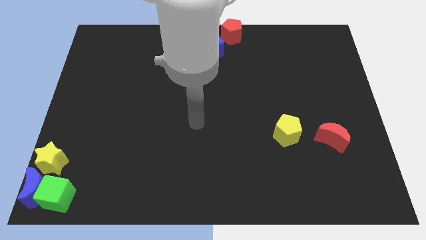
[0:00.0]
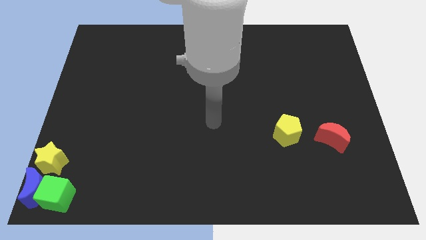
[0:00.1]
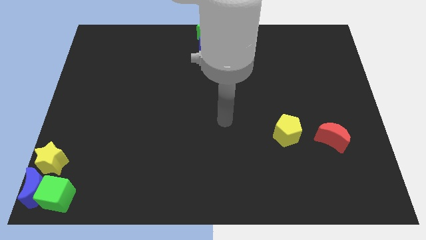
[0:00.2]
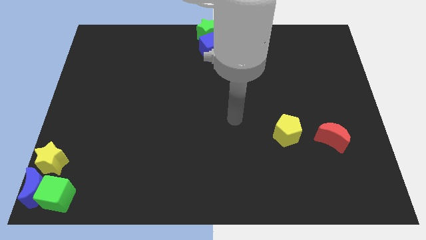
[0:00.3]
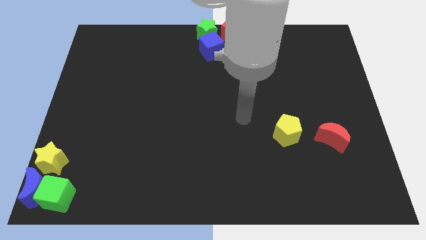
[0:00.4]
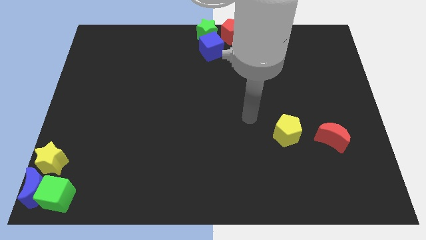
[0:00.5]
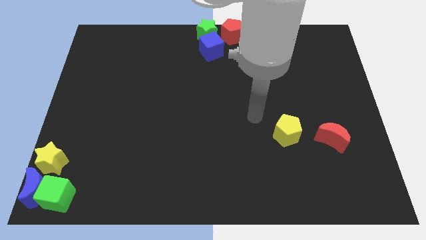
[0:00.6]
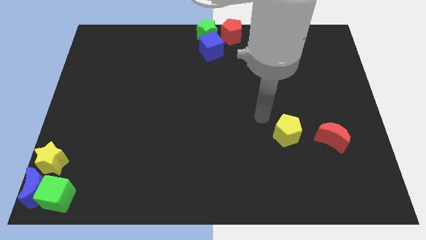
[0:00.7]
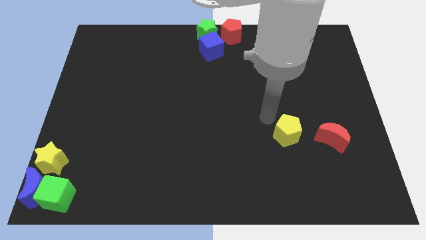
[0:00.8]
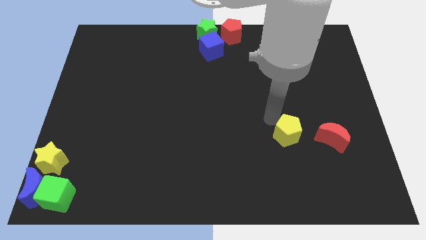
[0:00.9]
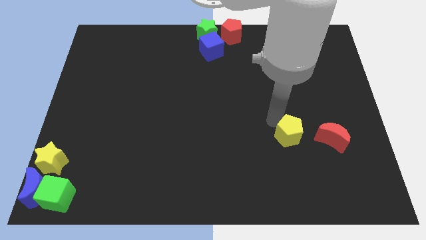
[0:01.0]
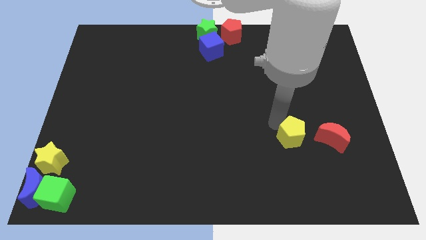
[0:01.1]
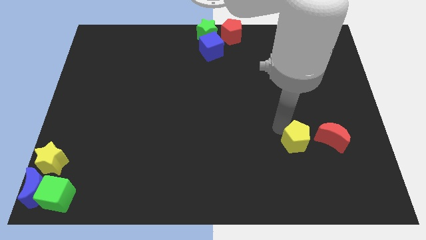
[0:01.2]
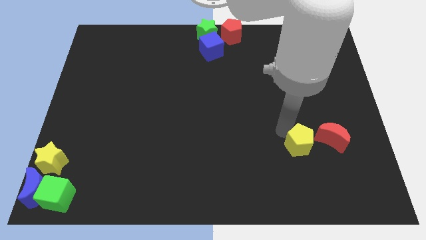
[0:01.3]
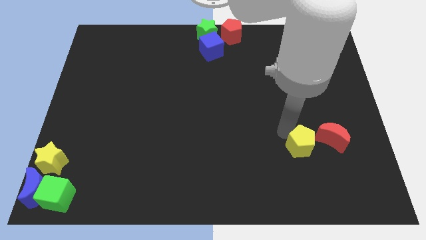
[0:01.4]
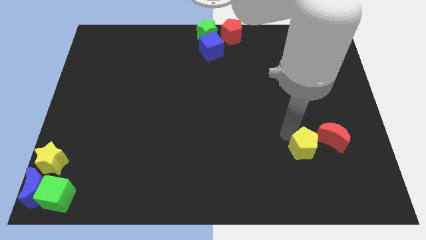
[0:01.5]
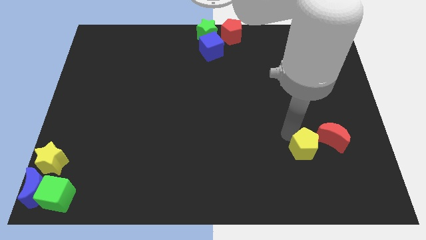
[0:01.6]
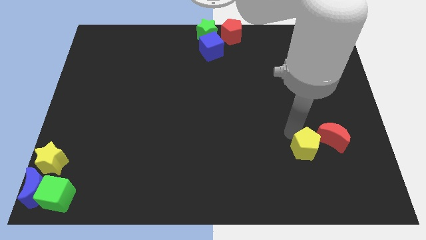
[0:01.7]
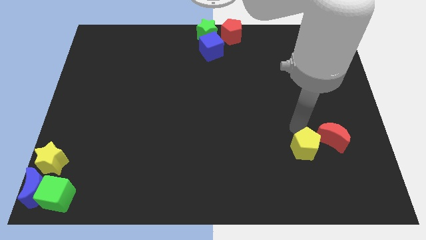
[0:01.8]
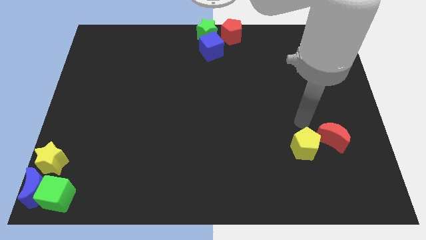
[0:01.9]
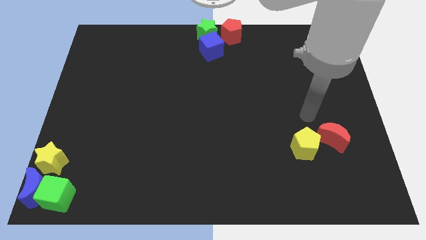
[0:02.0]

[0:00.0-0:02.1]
move the yellow pentagon slightly towards the red crescent

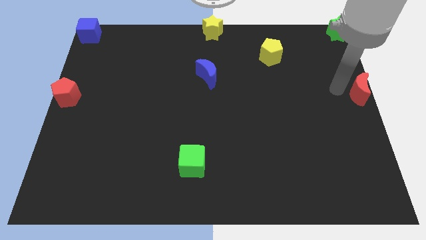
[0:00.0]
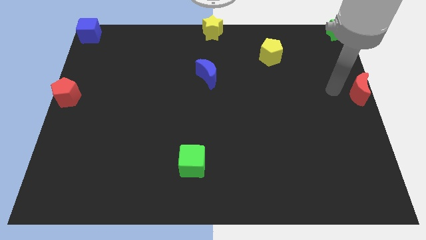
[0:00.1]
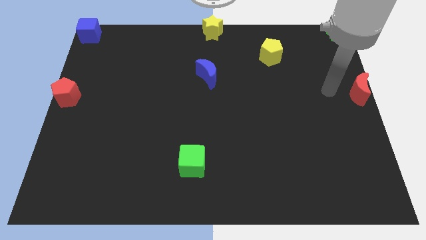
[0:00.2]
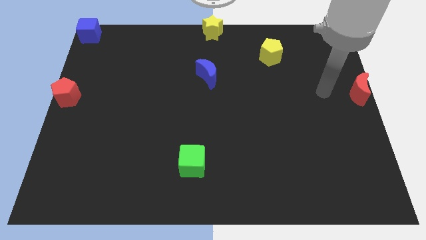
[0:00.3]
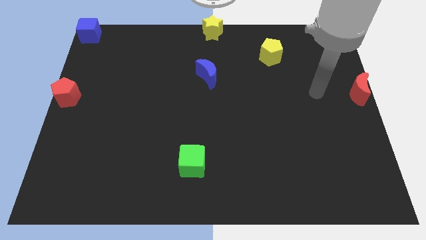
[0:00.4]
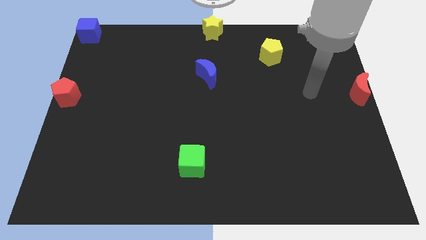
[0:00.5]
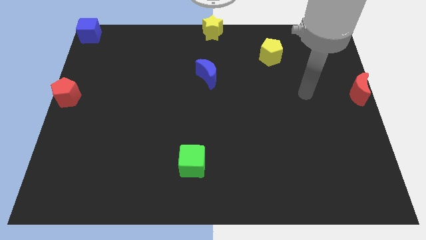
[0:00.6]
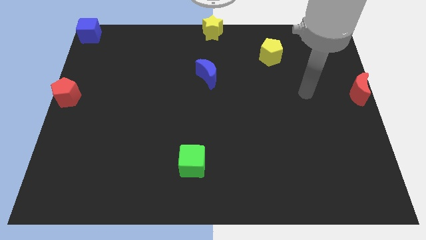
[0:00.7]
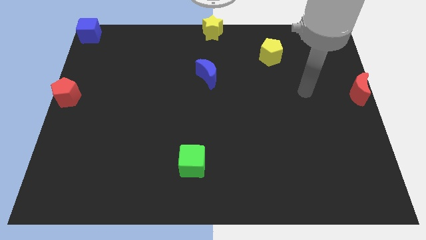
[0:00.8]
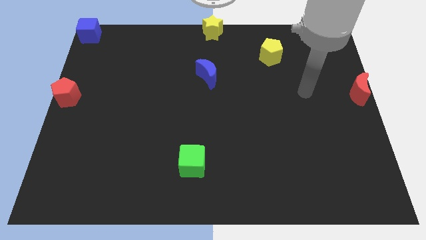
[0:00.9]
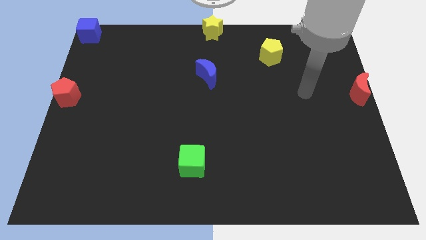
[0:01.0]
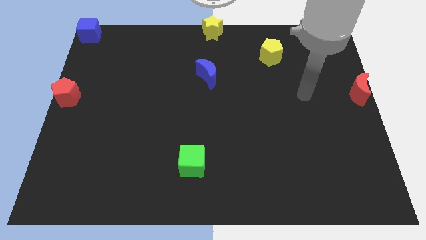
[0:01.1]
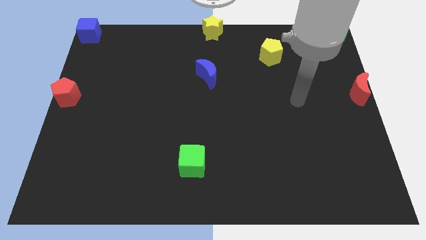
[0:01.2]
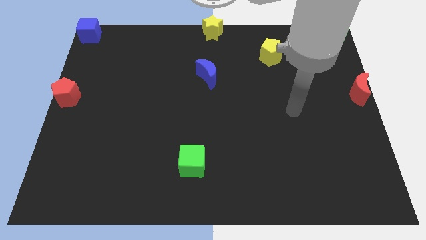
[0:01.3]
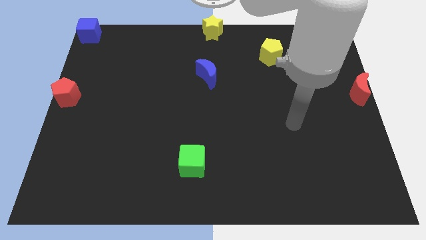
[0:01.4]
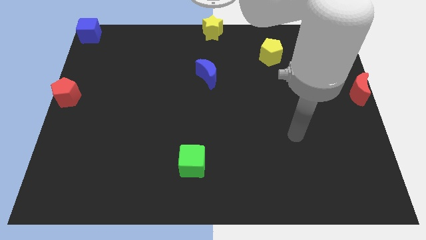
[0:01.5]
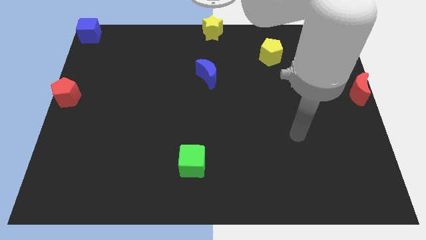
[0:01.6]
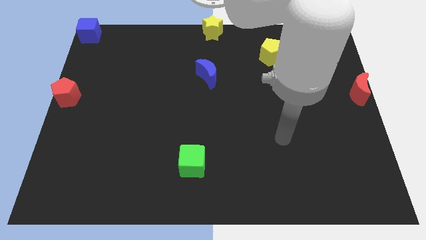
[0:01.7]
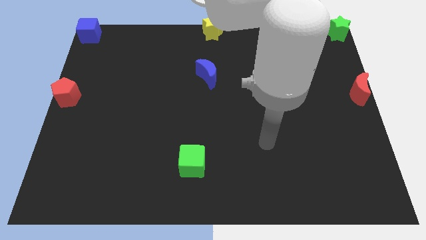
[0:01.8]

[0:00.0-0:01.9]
move the arm away from the red moon

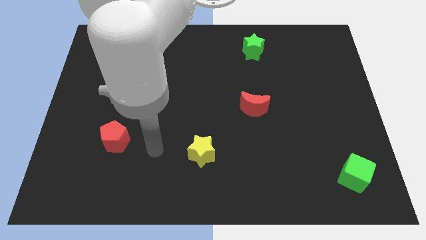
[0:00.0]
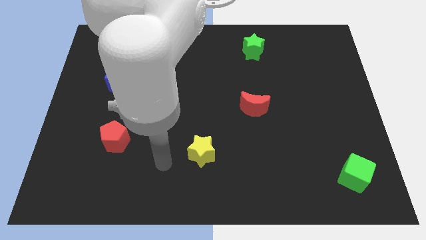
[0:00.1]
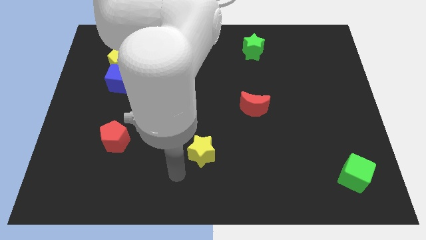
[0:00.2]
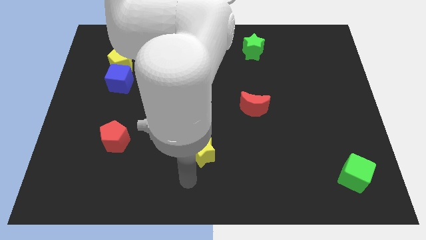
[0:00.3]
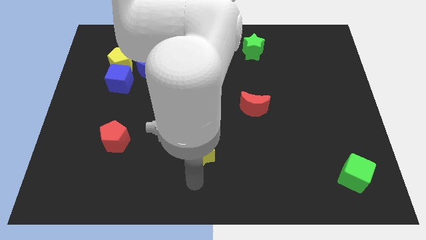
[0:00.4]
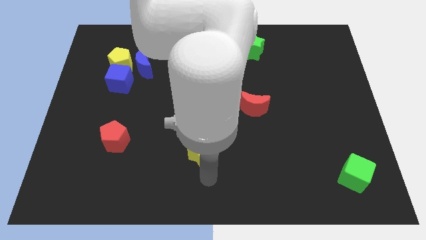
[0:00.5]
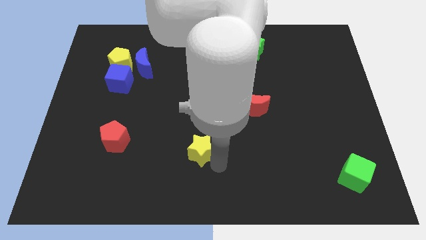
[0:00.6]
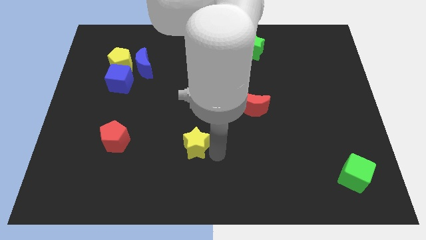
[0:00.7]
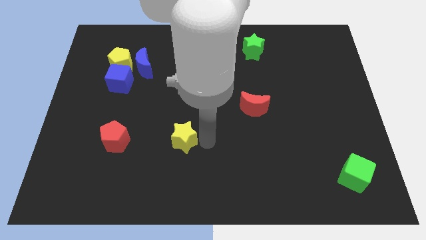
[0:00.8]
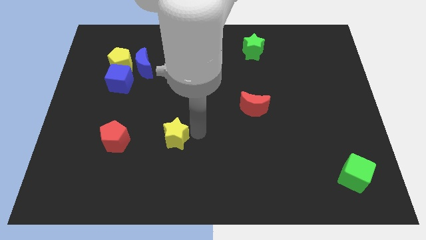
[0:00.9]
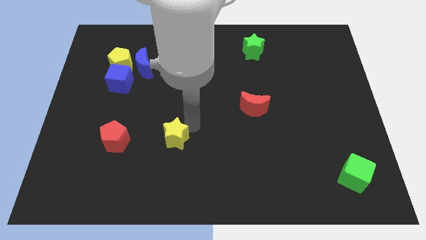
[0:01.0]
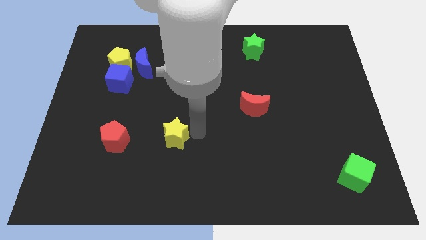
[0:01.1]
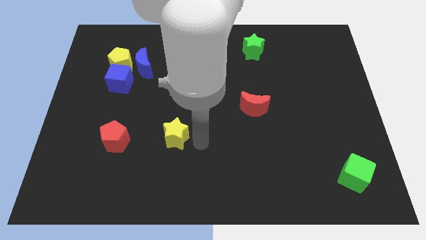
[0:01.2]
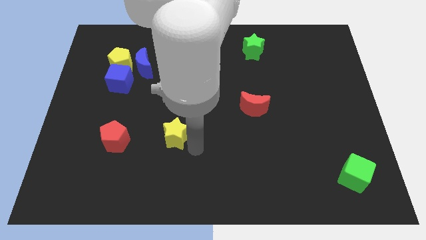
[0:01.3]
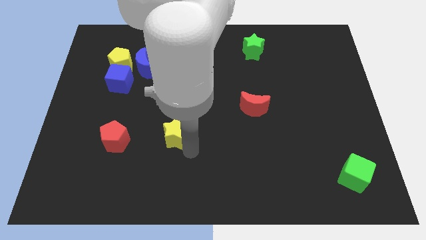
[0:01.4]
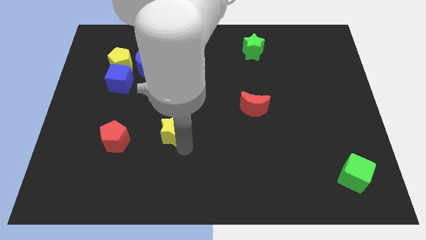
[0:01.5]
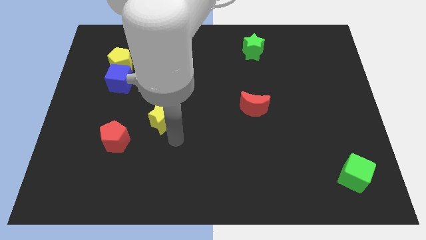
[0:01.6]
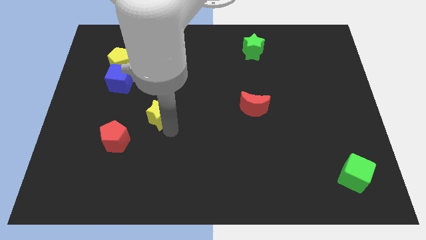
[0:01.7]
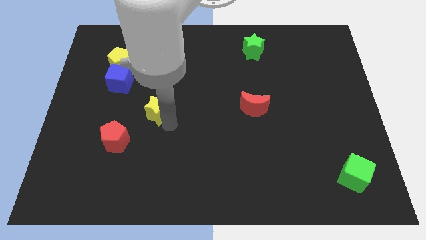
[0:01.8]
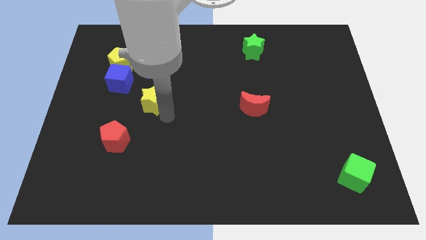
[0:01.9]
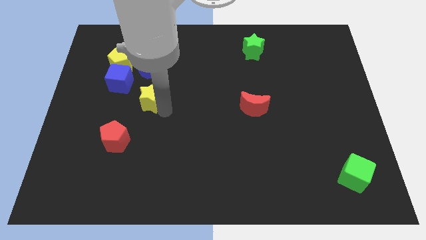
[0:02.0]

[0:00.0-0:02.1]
push yellow star vertically to the bottom of the blue crescent

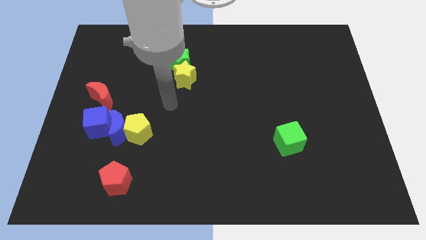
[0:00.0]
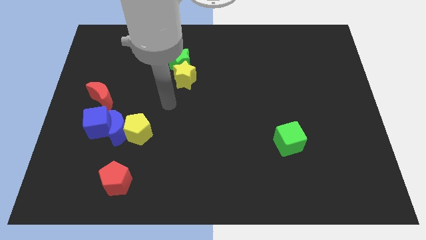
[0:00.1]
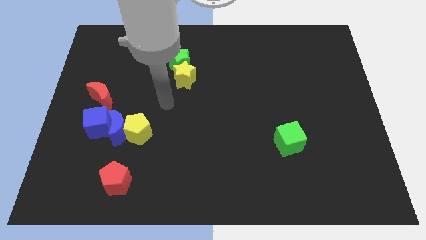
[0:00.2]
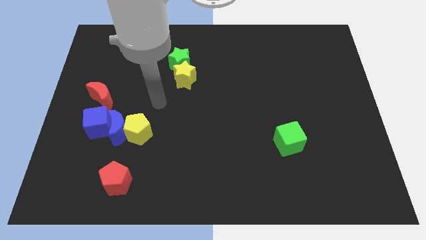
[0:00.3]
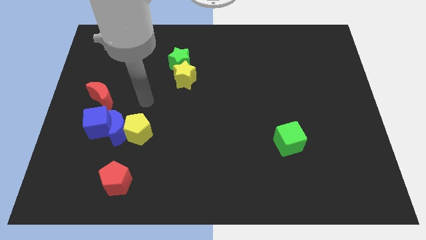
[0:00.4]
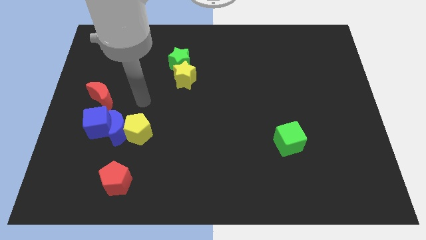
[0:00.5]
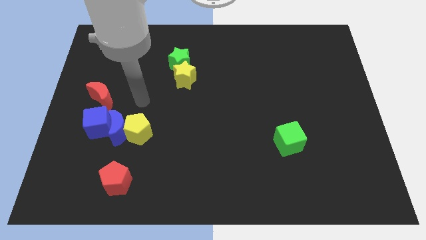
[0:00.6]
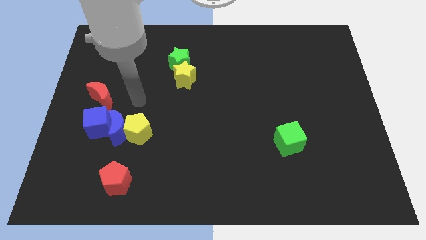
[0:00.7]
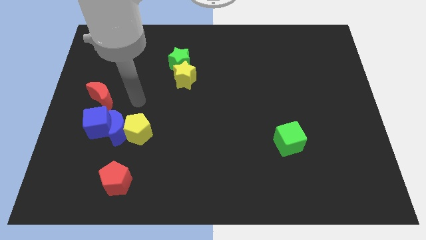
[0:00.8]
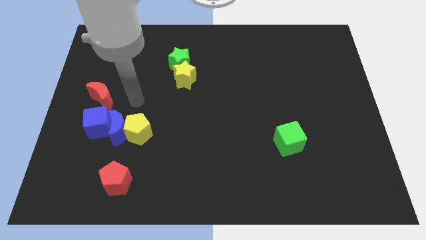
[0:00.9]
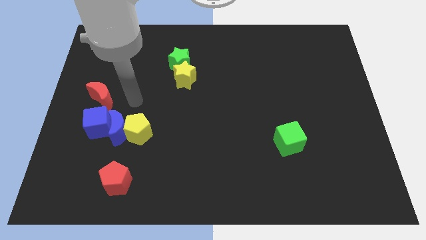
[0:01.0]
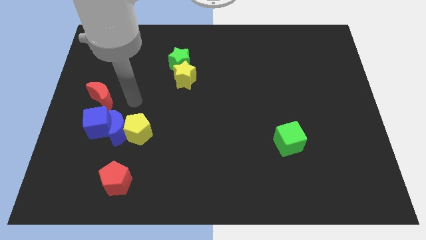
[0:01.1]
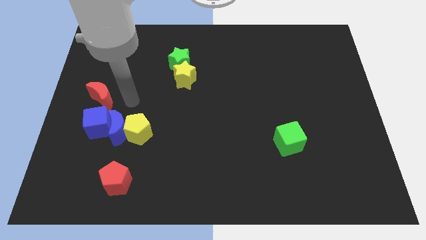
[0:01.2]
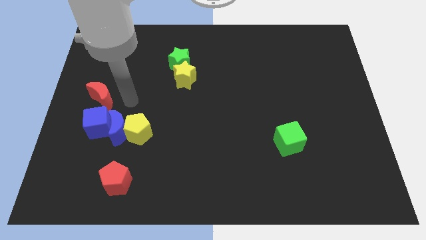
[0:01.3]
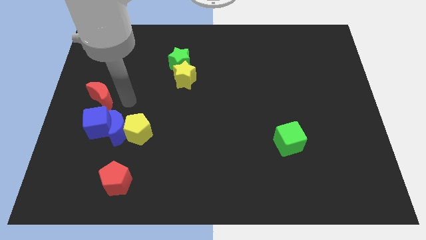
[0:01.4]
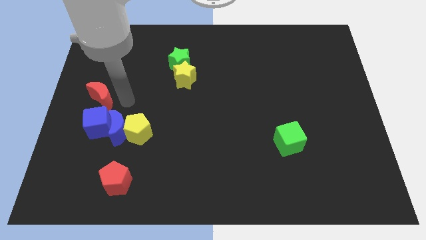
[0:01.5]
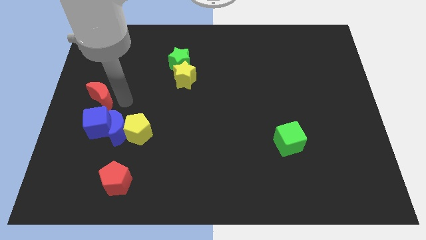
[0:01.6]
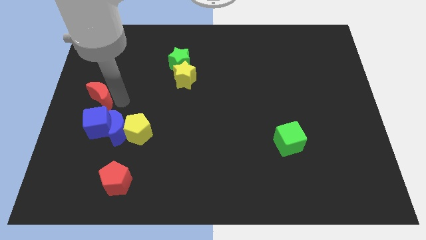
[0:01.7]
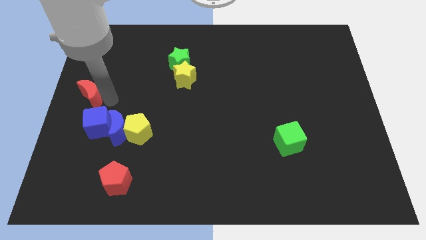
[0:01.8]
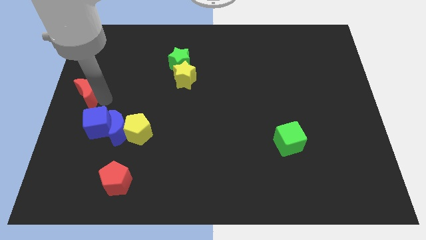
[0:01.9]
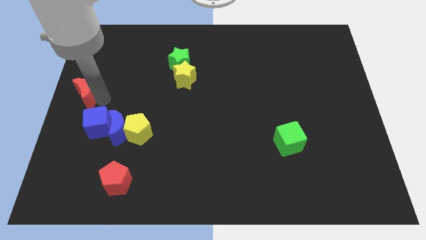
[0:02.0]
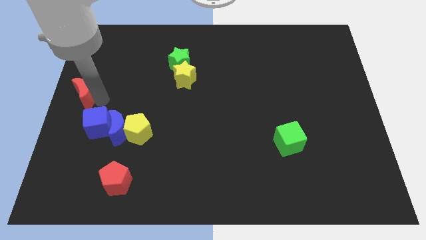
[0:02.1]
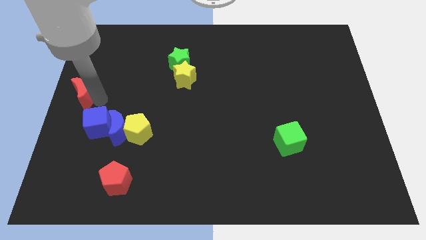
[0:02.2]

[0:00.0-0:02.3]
push red crescent slightly towards left

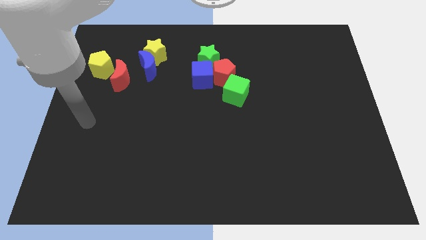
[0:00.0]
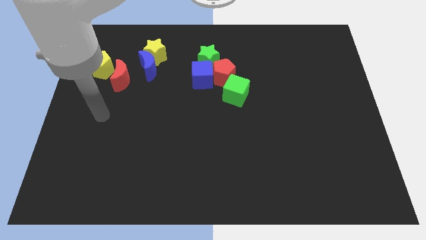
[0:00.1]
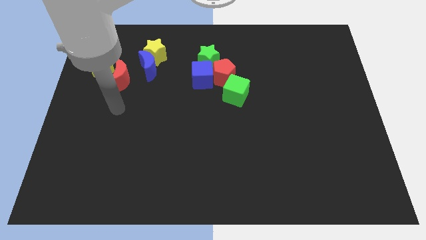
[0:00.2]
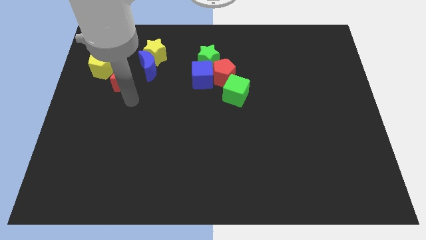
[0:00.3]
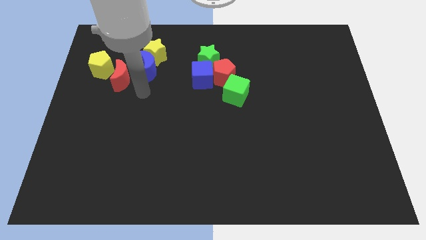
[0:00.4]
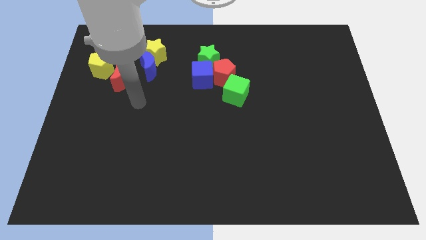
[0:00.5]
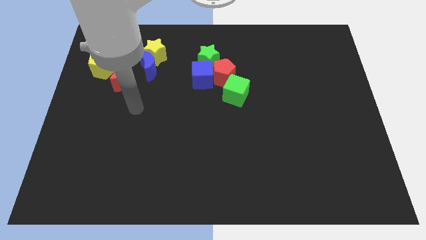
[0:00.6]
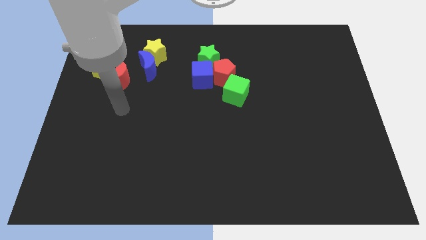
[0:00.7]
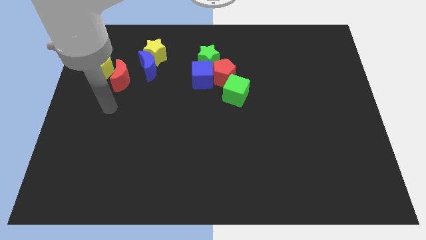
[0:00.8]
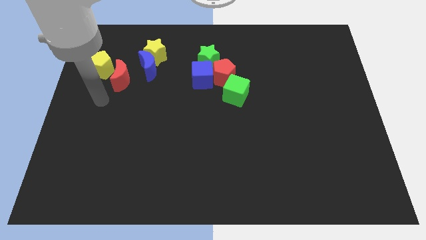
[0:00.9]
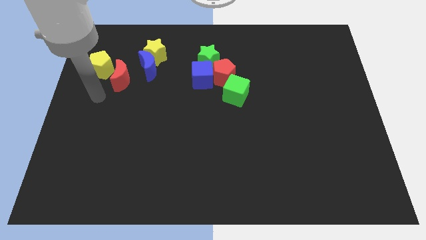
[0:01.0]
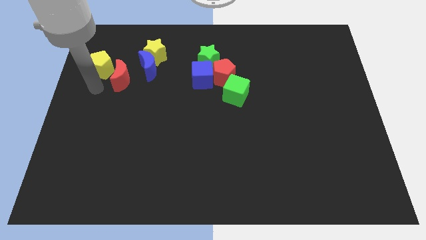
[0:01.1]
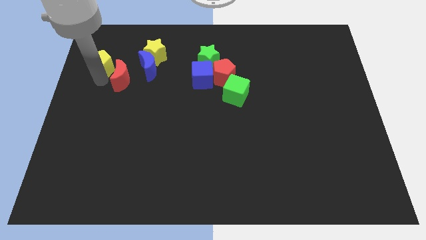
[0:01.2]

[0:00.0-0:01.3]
point your arm below yellow pentagon
